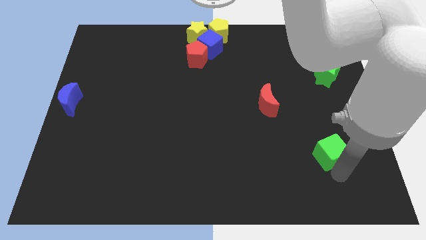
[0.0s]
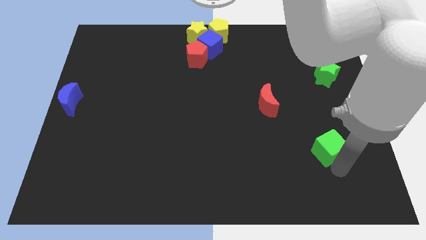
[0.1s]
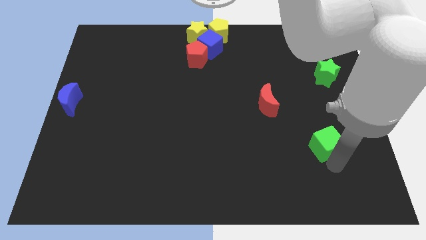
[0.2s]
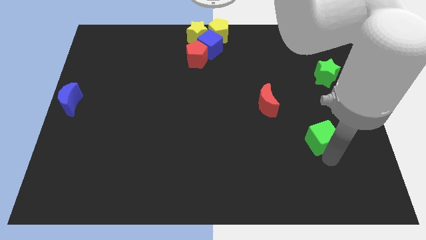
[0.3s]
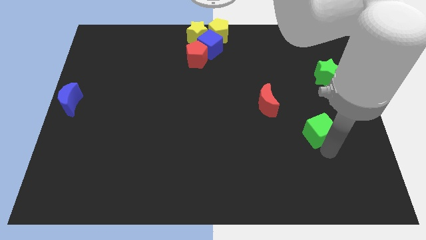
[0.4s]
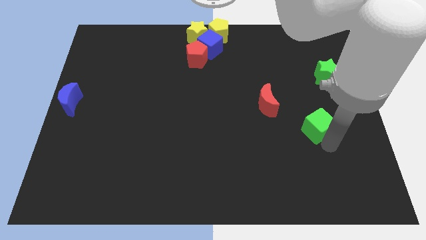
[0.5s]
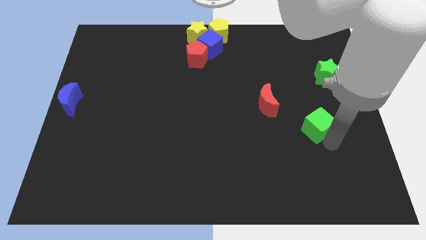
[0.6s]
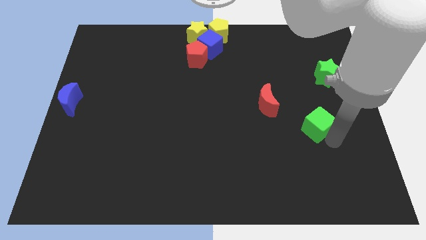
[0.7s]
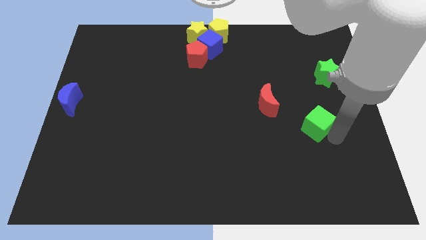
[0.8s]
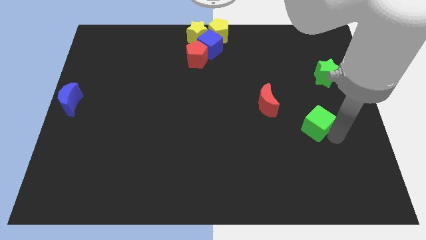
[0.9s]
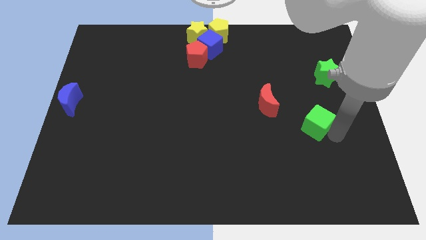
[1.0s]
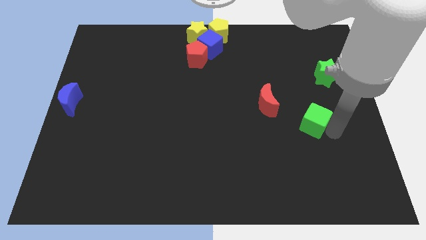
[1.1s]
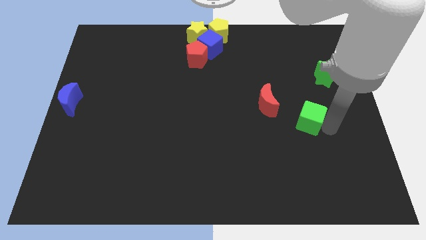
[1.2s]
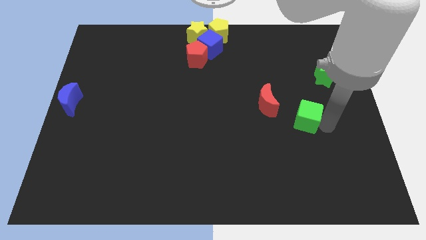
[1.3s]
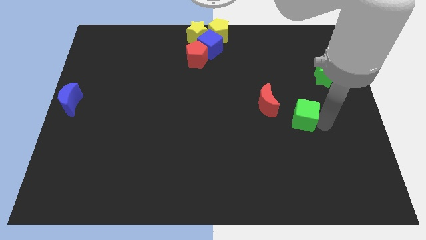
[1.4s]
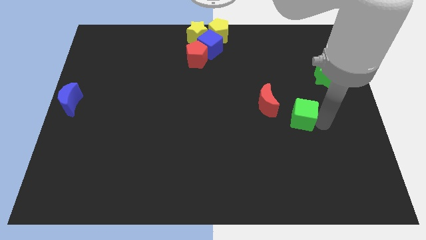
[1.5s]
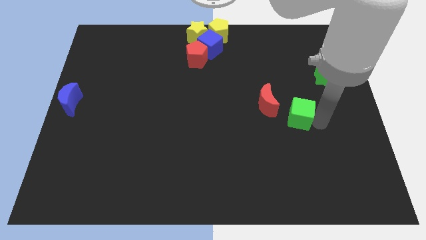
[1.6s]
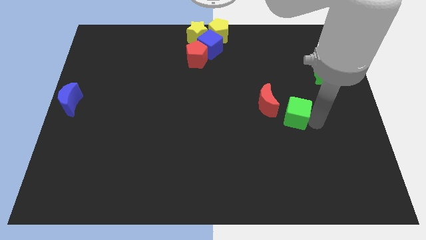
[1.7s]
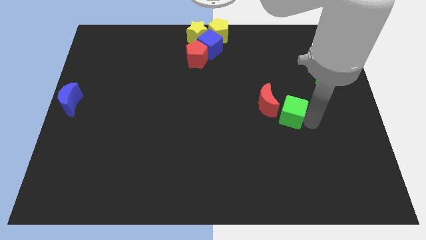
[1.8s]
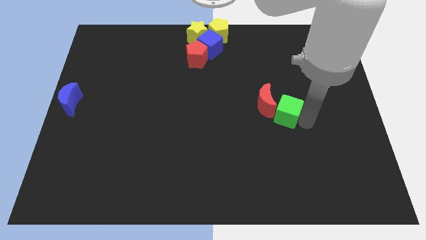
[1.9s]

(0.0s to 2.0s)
push the green cube into the red crescent

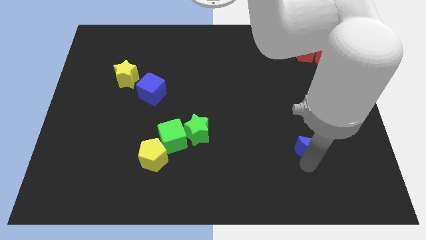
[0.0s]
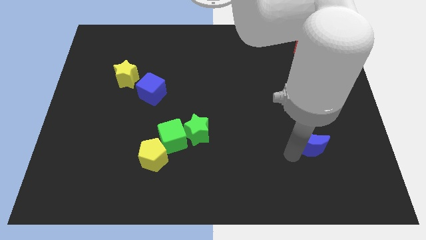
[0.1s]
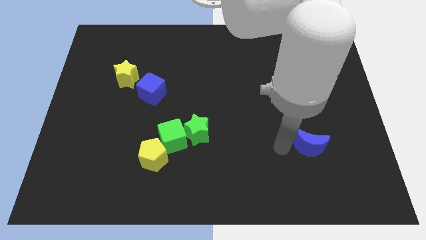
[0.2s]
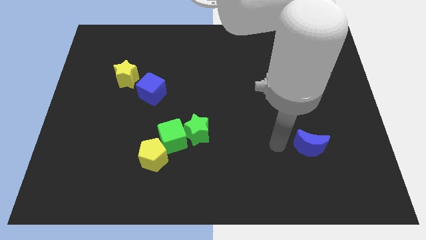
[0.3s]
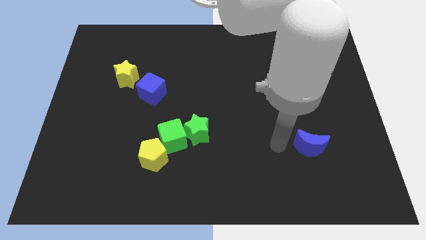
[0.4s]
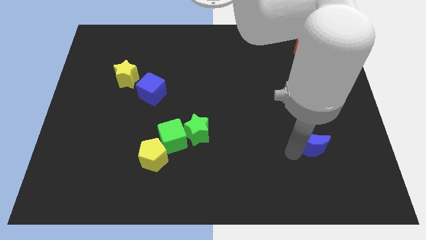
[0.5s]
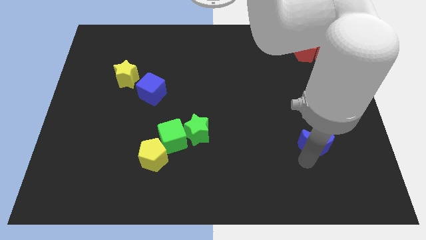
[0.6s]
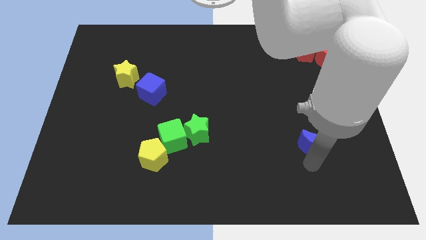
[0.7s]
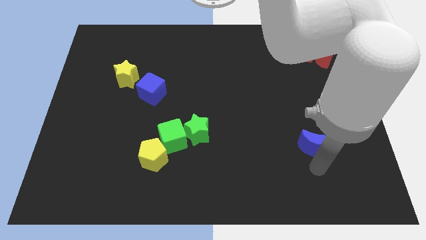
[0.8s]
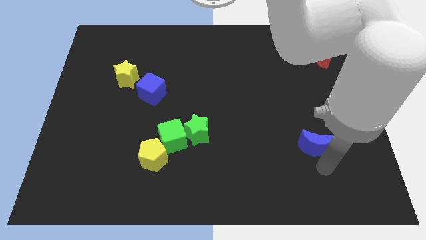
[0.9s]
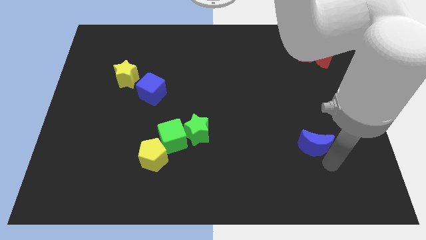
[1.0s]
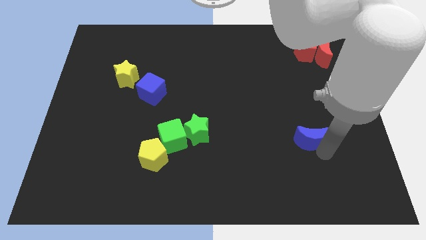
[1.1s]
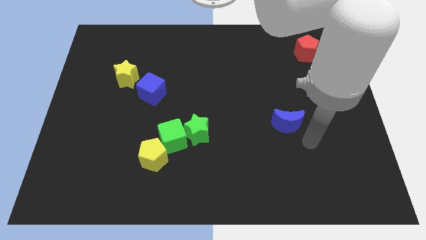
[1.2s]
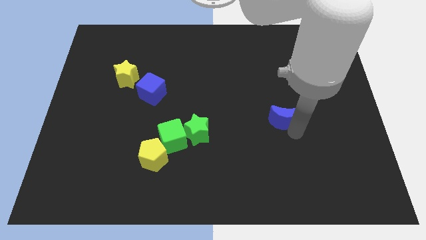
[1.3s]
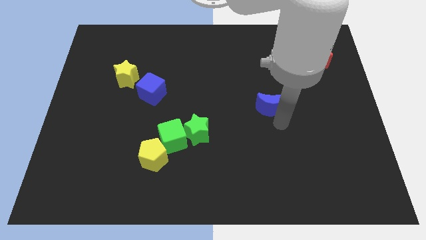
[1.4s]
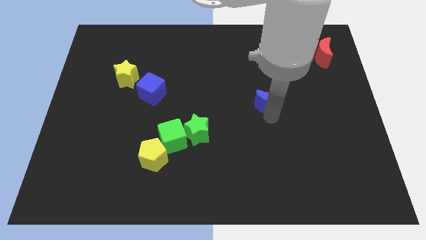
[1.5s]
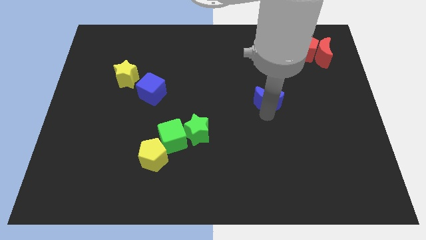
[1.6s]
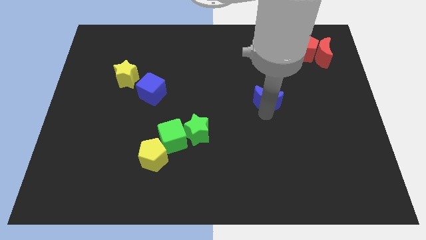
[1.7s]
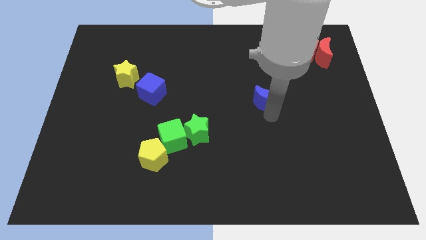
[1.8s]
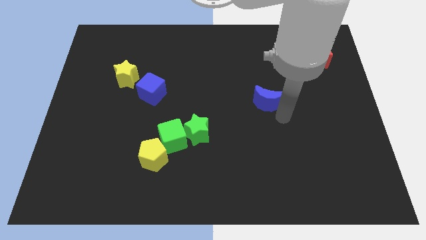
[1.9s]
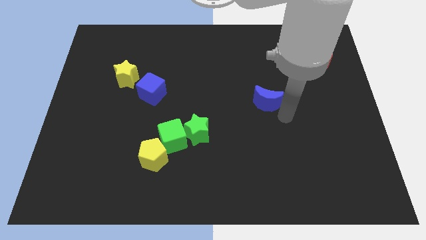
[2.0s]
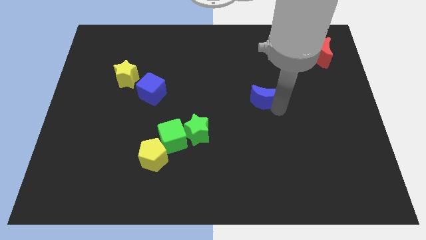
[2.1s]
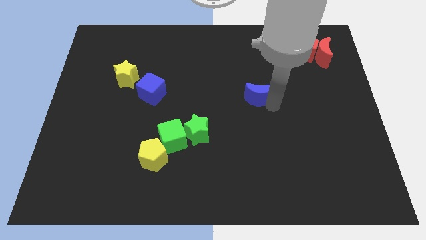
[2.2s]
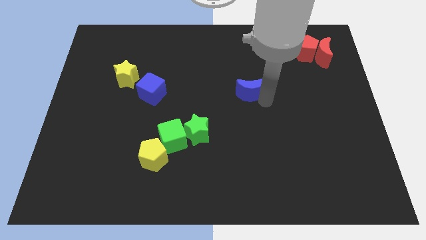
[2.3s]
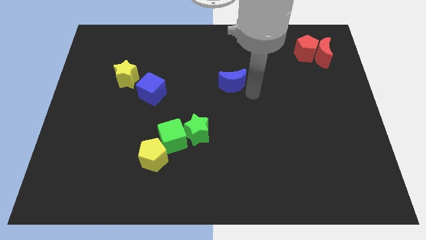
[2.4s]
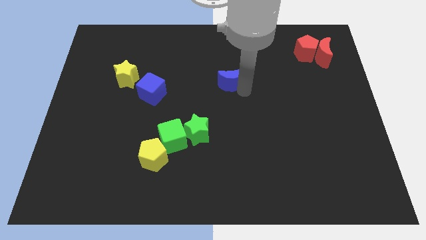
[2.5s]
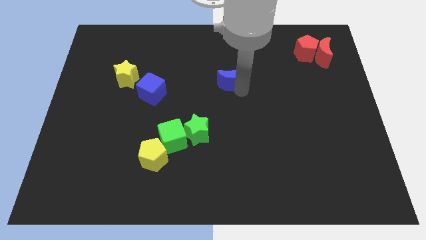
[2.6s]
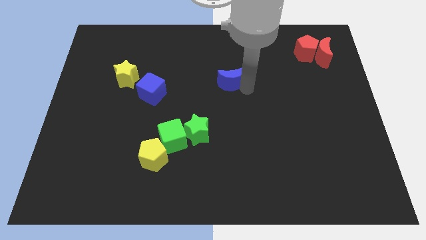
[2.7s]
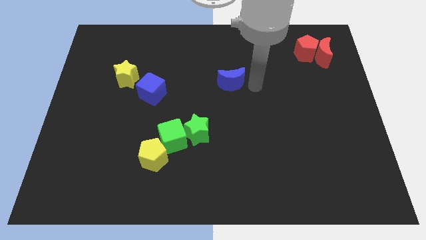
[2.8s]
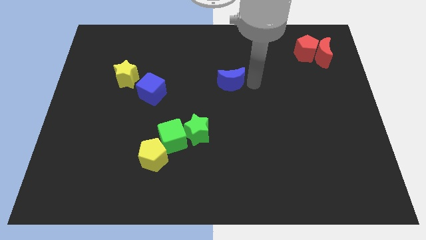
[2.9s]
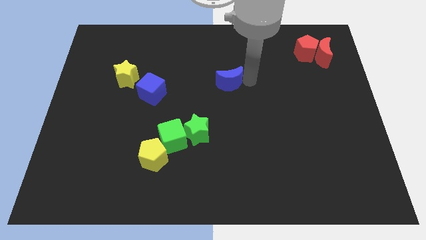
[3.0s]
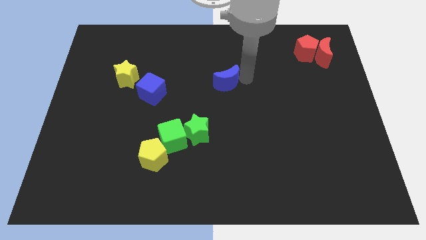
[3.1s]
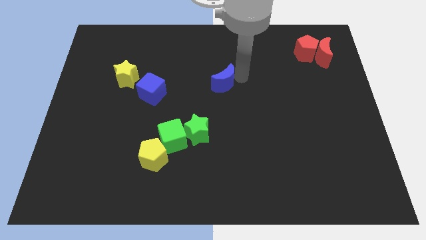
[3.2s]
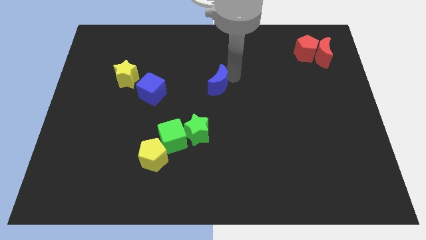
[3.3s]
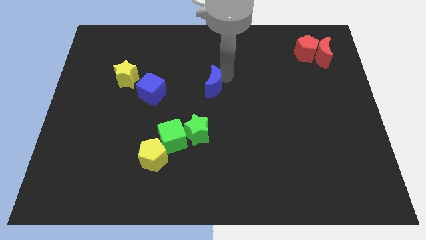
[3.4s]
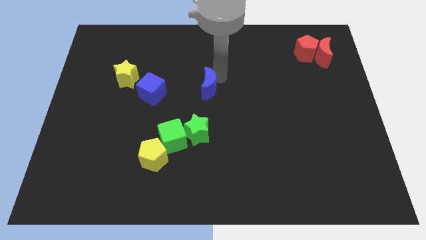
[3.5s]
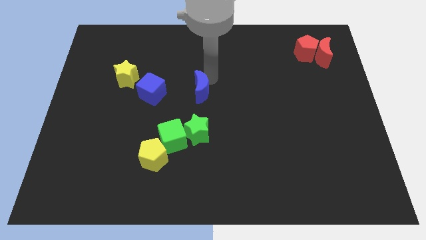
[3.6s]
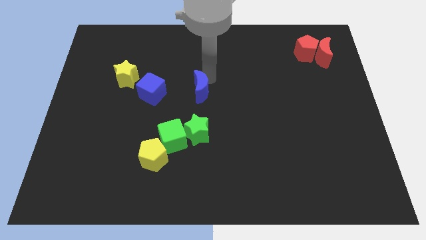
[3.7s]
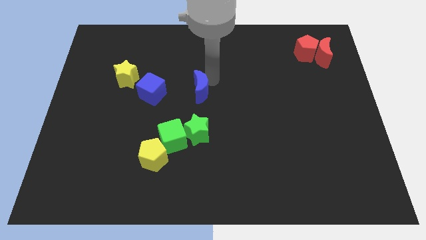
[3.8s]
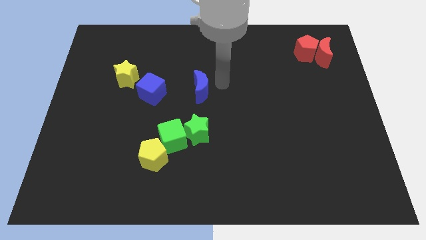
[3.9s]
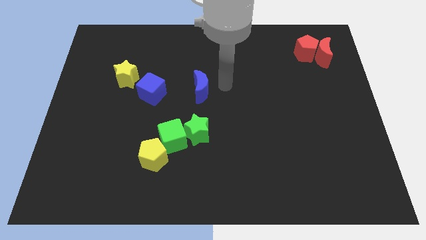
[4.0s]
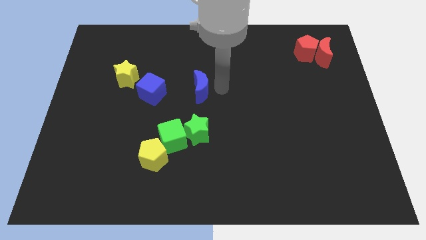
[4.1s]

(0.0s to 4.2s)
place the blue moon right to the blue cube

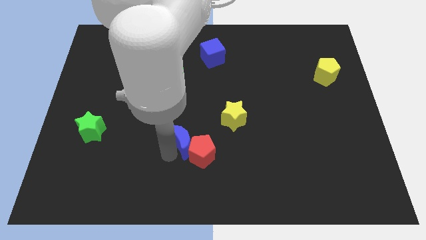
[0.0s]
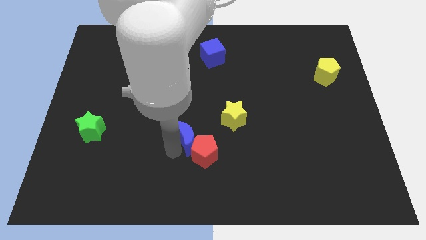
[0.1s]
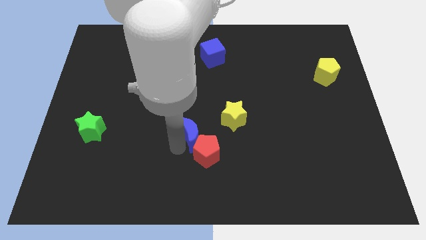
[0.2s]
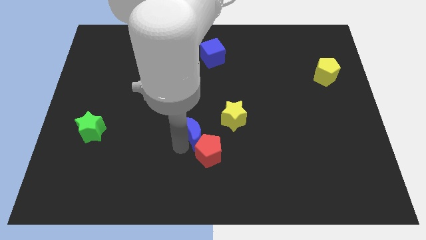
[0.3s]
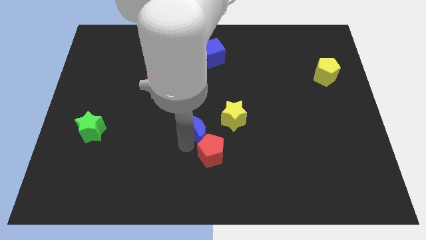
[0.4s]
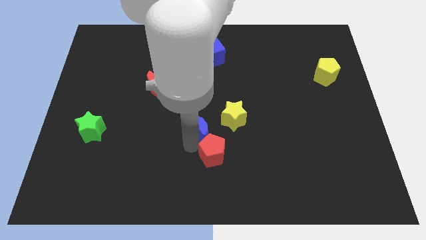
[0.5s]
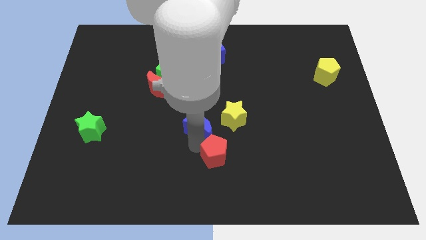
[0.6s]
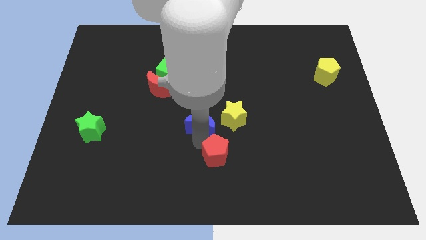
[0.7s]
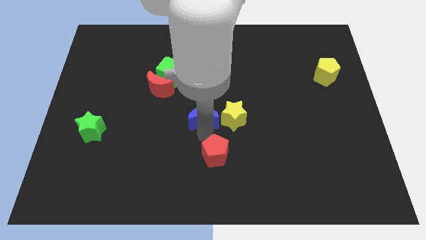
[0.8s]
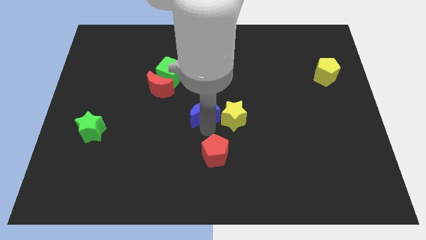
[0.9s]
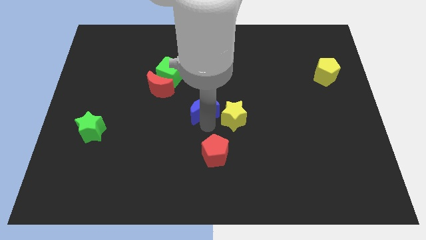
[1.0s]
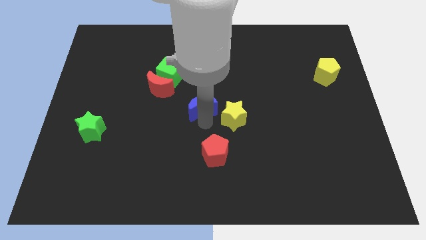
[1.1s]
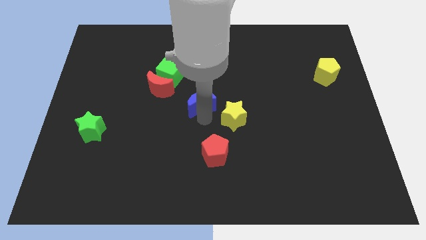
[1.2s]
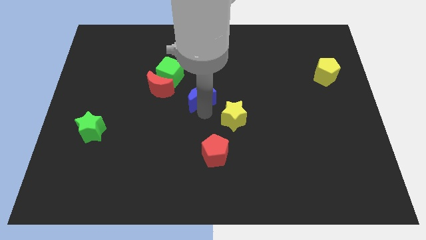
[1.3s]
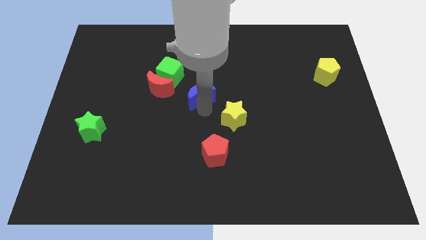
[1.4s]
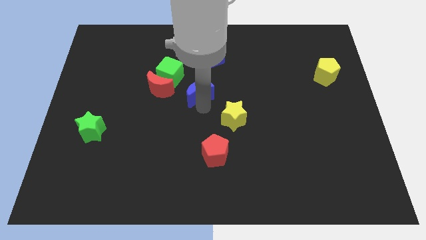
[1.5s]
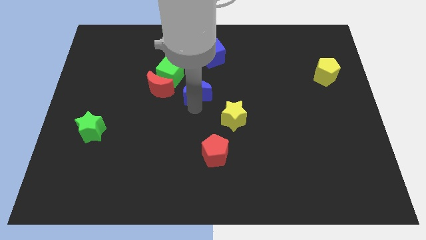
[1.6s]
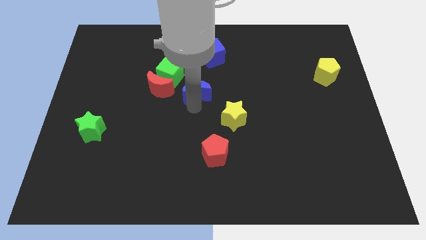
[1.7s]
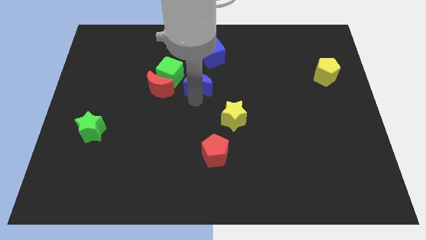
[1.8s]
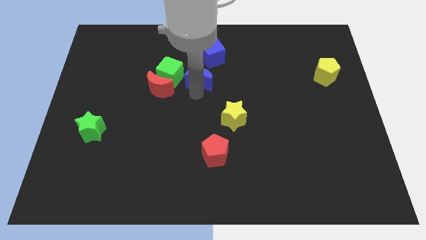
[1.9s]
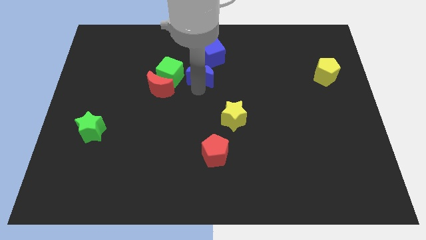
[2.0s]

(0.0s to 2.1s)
put the blue moon right to the green cube

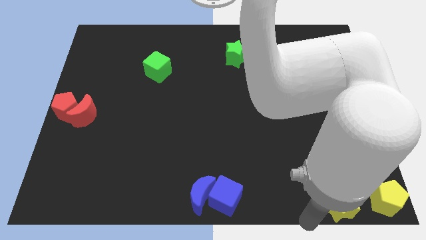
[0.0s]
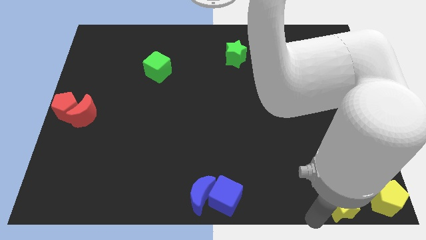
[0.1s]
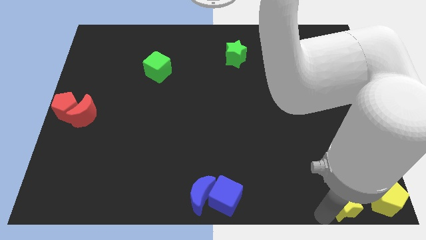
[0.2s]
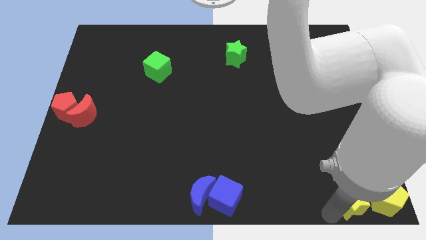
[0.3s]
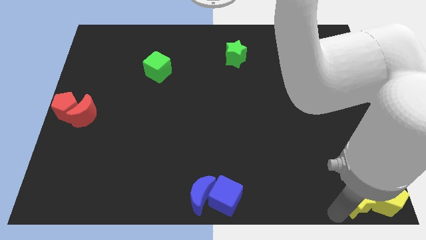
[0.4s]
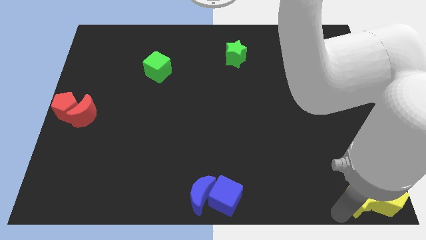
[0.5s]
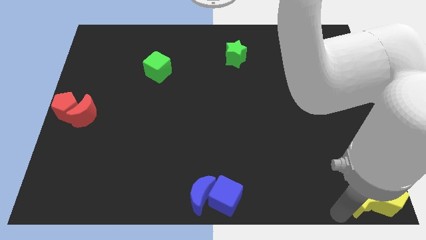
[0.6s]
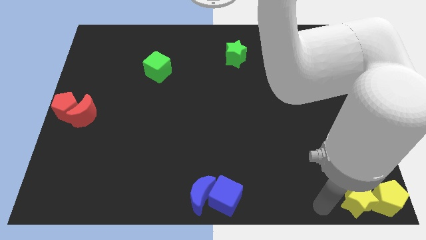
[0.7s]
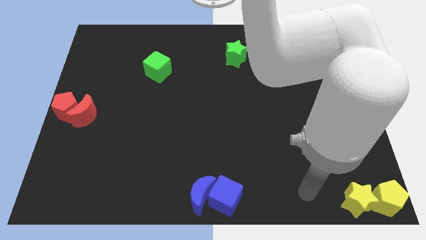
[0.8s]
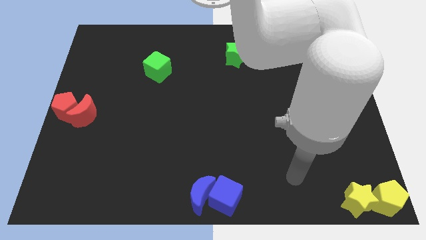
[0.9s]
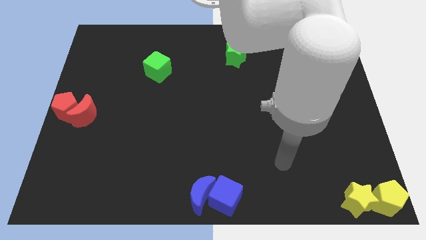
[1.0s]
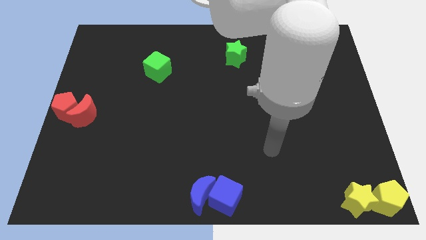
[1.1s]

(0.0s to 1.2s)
push the yellow star to the left of the yellow pentagon at the bottom of the board
